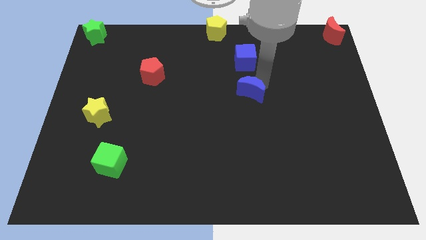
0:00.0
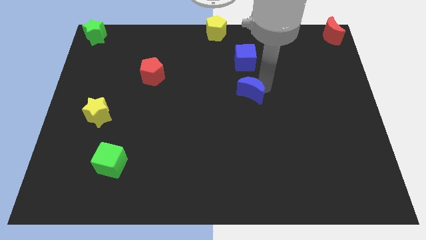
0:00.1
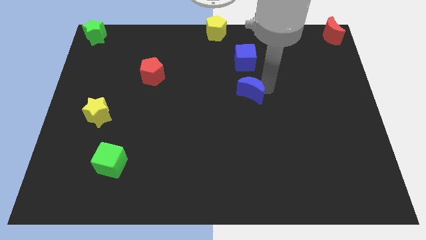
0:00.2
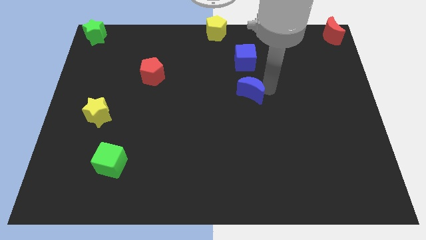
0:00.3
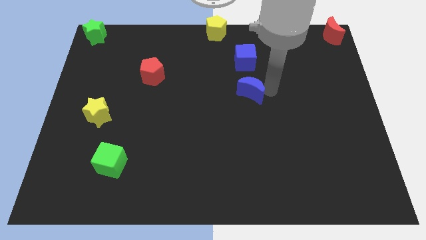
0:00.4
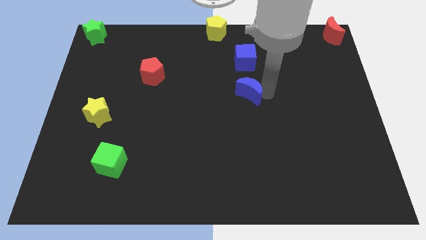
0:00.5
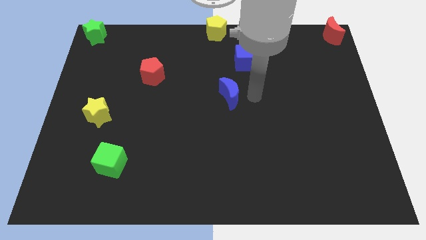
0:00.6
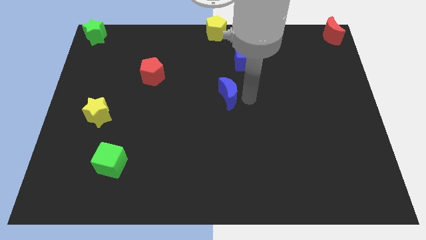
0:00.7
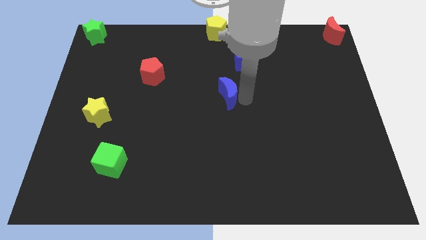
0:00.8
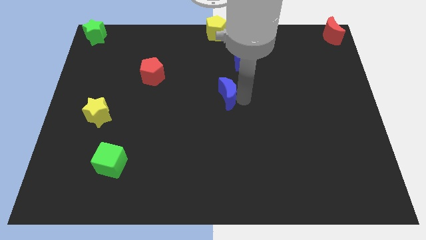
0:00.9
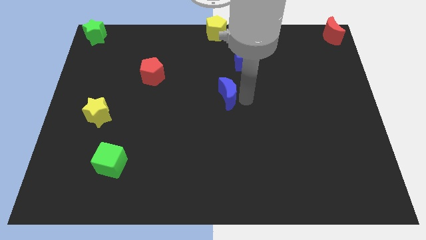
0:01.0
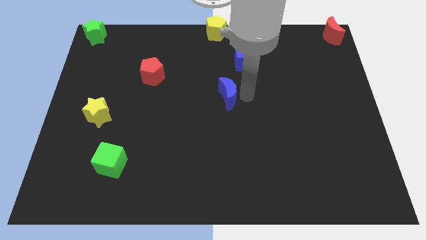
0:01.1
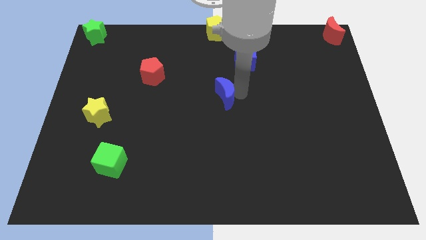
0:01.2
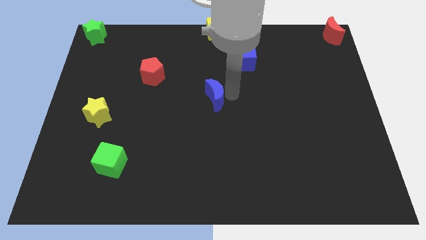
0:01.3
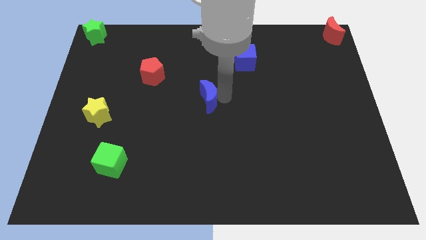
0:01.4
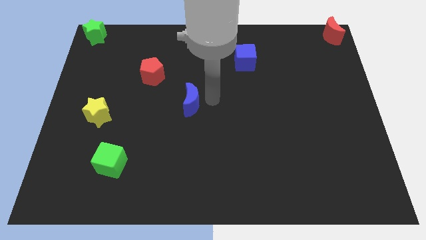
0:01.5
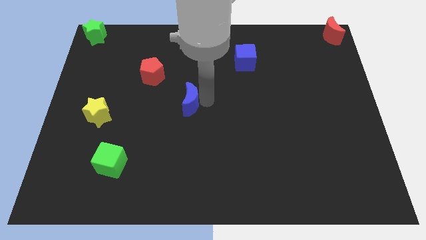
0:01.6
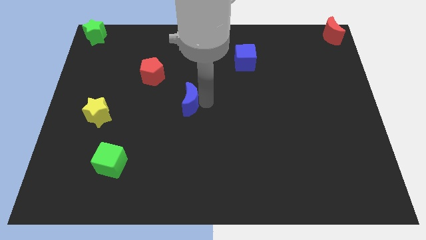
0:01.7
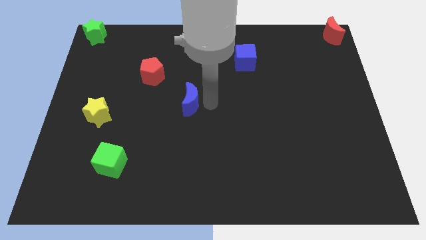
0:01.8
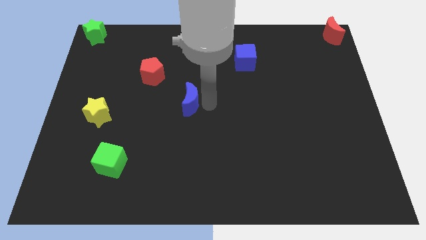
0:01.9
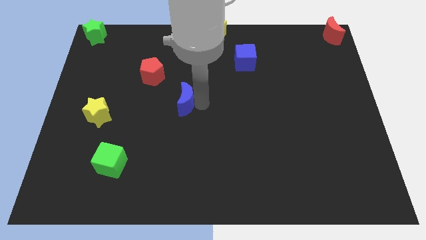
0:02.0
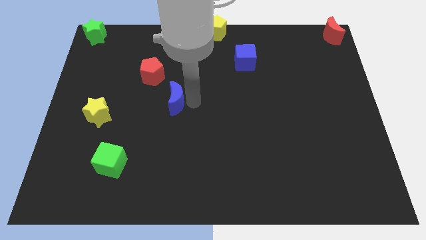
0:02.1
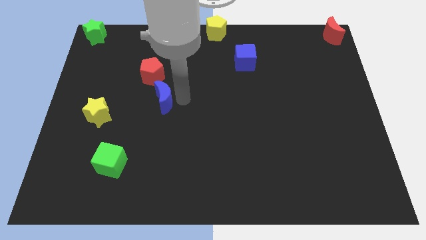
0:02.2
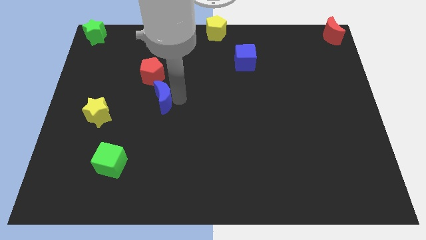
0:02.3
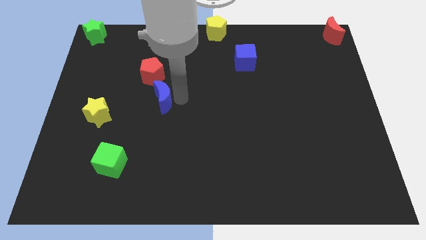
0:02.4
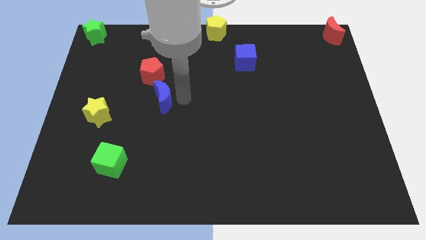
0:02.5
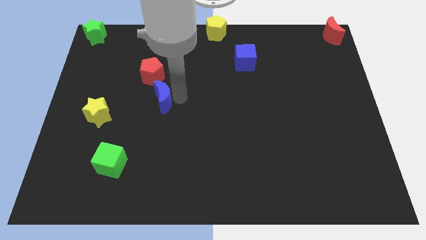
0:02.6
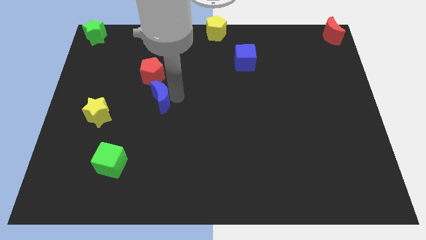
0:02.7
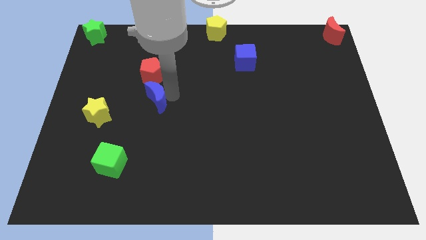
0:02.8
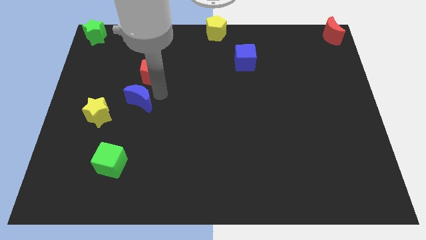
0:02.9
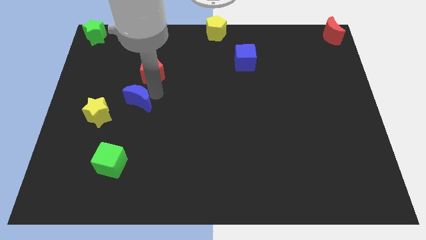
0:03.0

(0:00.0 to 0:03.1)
place the blue moon diagonally to the top right of the yellow star

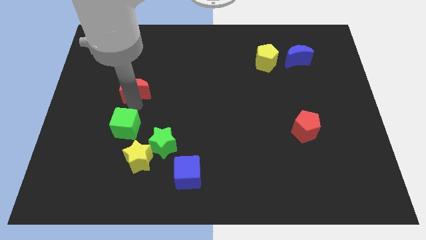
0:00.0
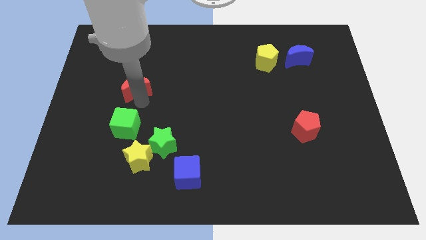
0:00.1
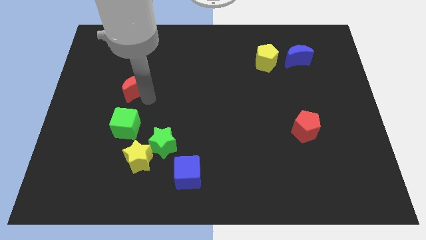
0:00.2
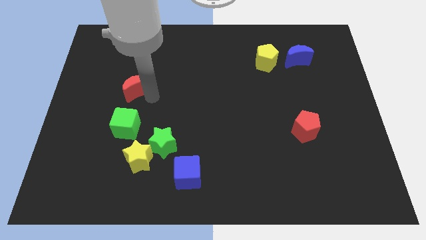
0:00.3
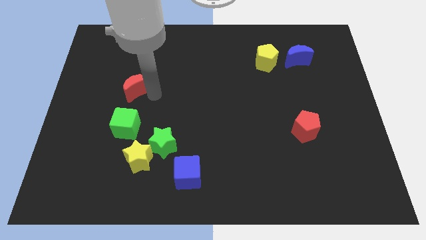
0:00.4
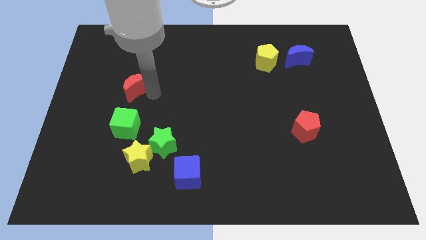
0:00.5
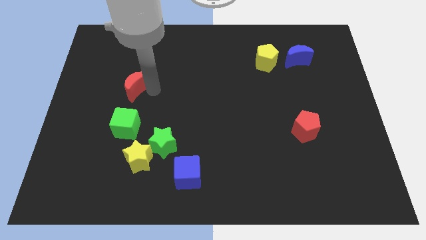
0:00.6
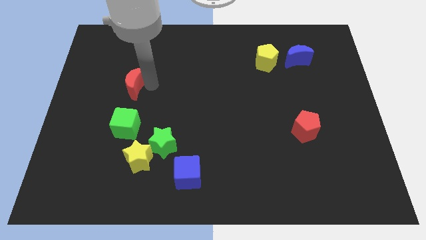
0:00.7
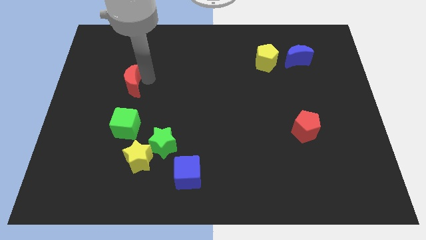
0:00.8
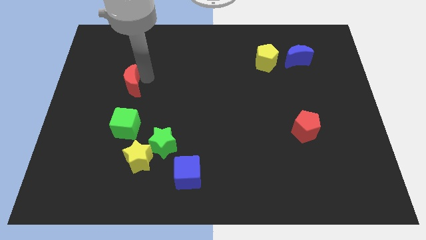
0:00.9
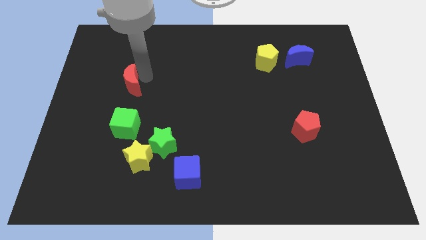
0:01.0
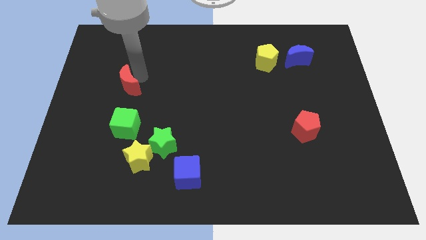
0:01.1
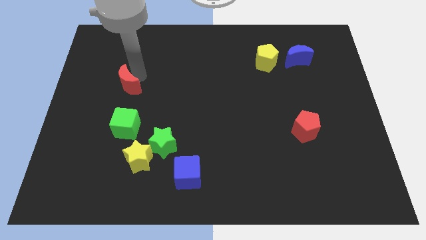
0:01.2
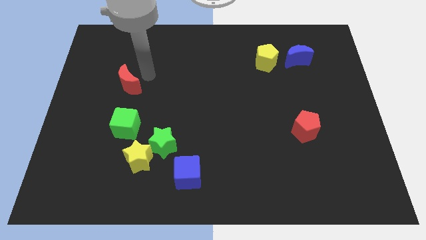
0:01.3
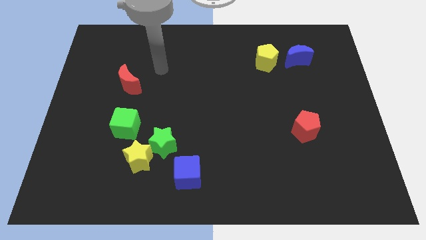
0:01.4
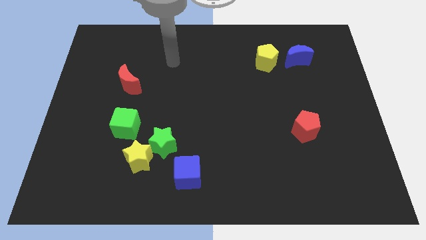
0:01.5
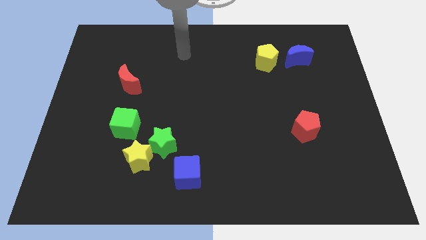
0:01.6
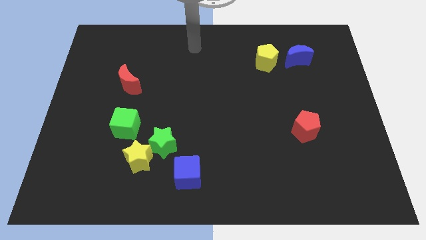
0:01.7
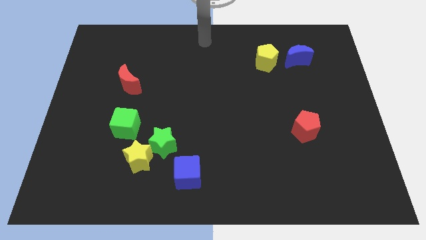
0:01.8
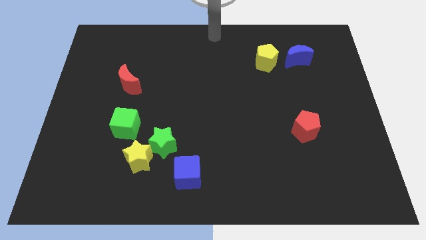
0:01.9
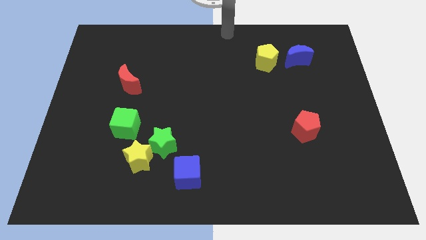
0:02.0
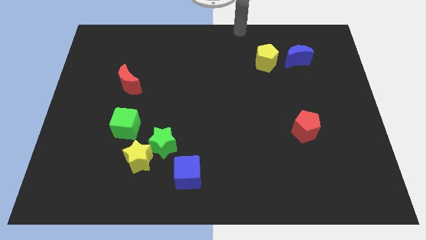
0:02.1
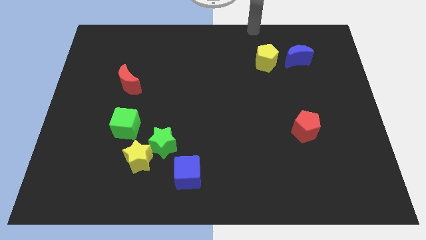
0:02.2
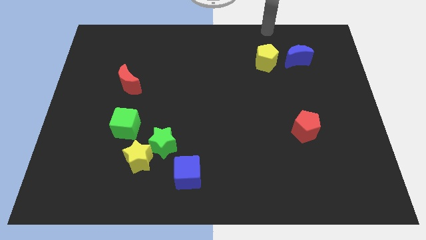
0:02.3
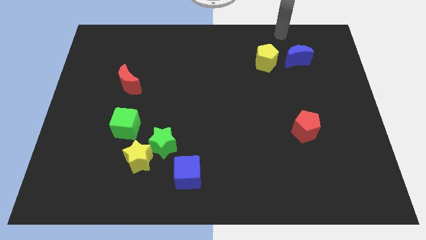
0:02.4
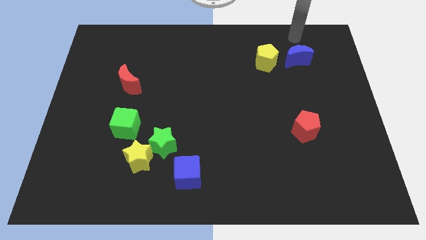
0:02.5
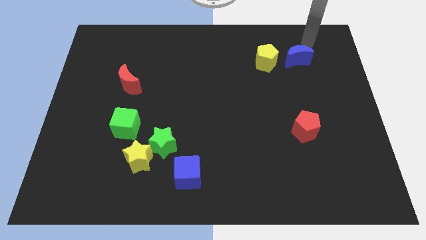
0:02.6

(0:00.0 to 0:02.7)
place the red moon vertically above the green cube

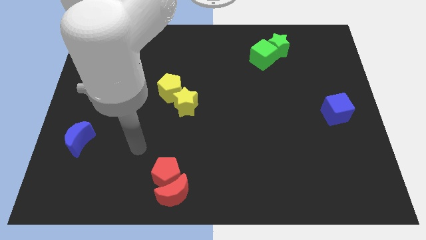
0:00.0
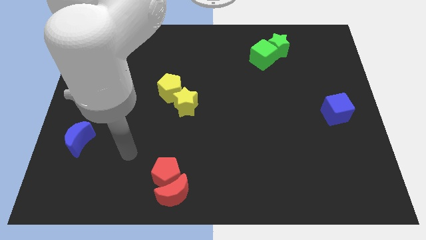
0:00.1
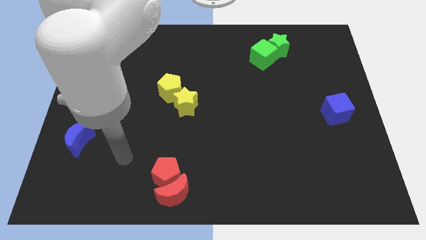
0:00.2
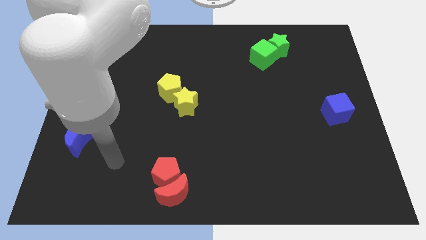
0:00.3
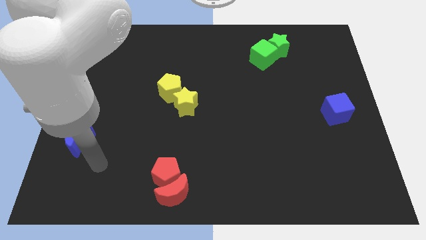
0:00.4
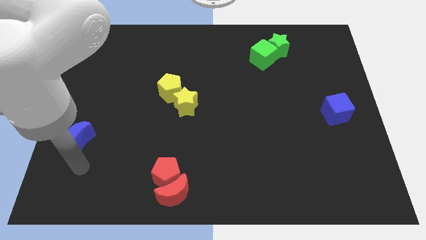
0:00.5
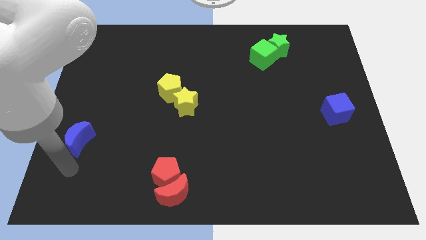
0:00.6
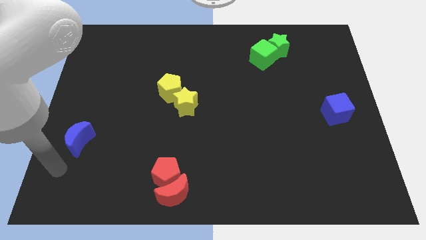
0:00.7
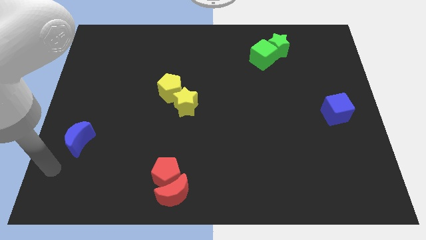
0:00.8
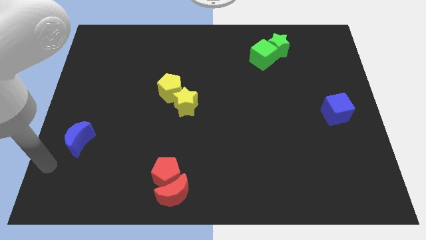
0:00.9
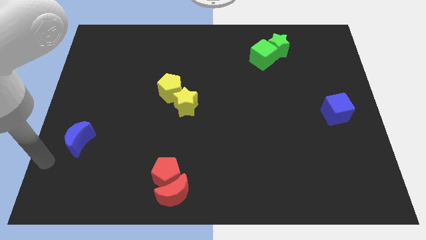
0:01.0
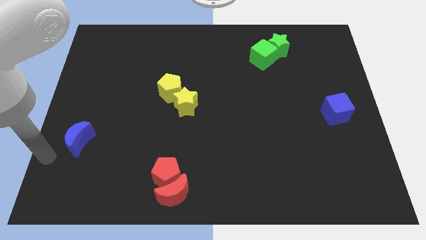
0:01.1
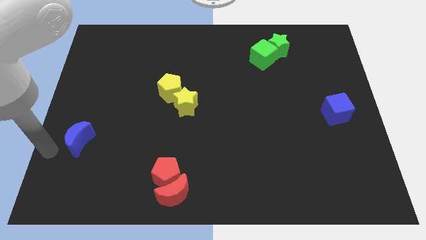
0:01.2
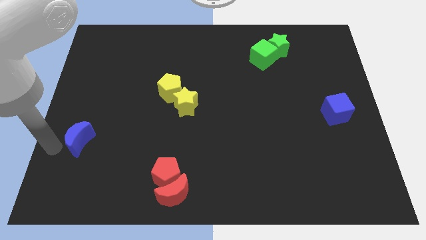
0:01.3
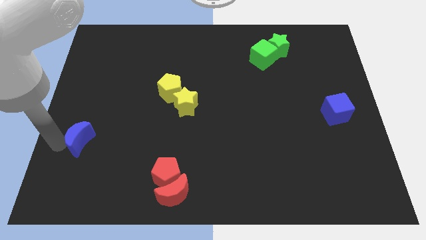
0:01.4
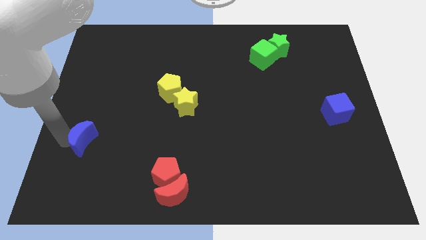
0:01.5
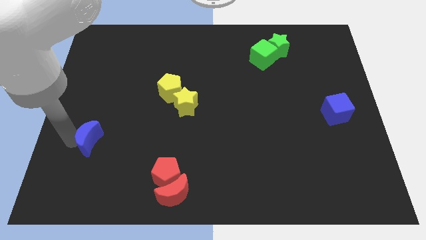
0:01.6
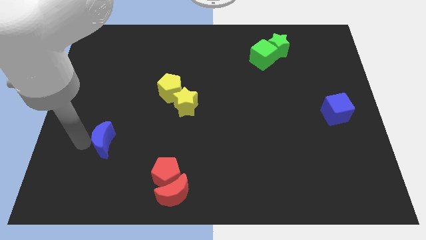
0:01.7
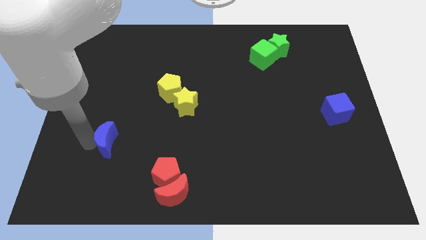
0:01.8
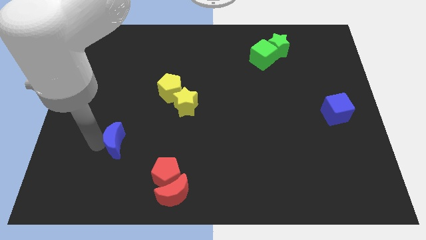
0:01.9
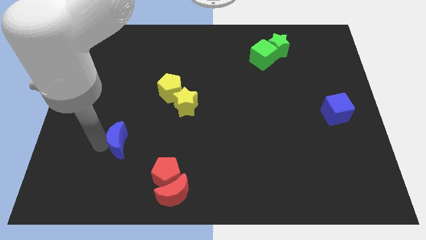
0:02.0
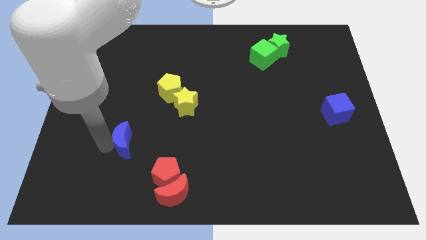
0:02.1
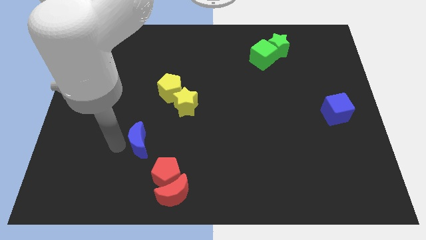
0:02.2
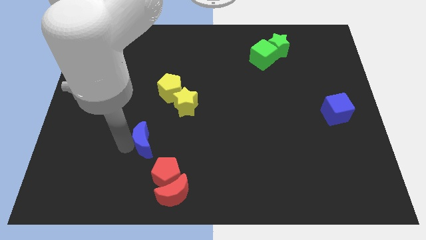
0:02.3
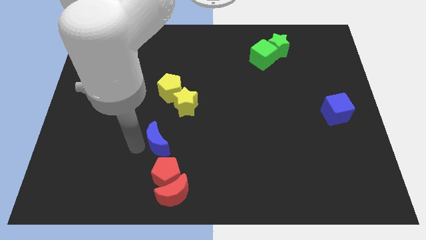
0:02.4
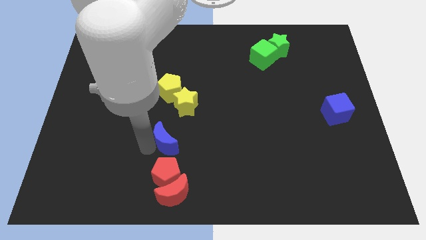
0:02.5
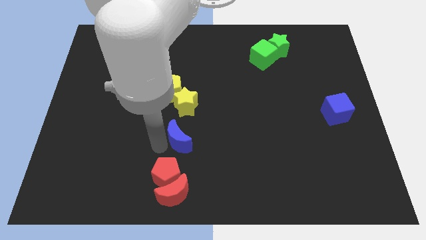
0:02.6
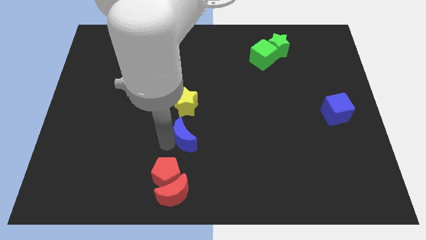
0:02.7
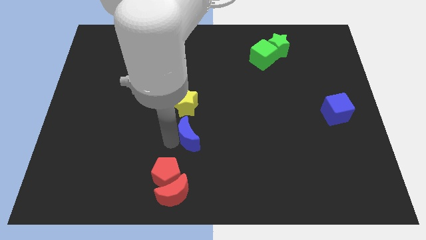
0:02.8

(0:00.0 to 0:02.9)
slide the blue moon below the yellow star

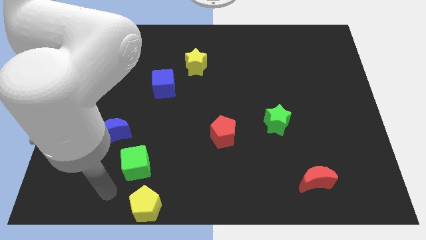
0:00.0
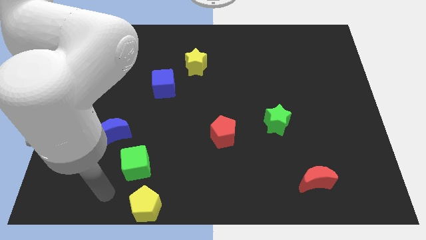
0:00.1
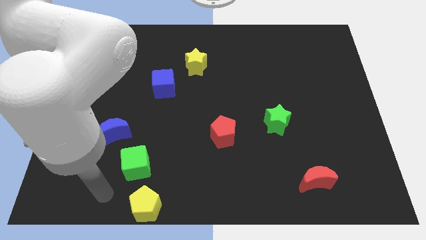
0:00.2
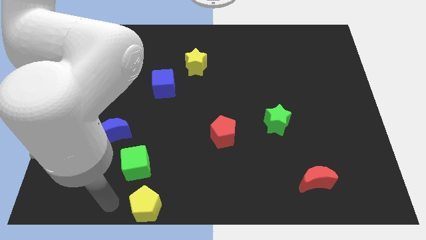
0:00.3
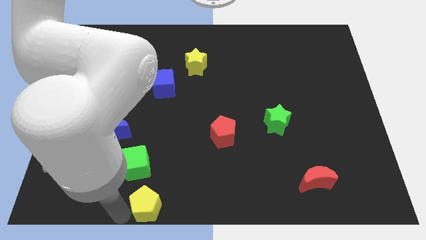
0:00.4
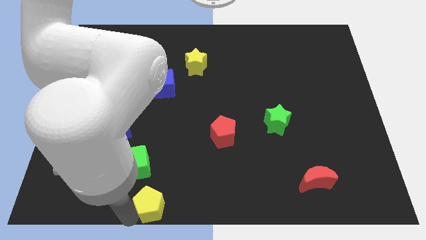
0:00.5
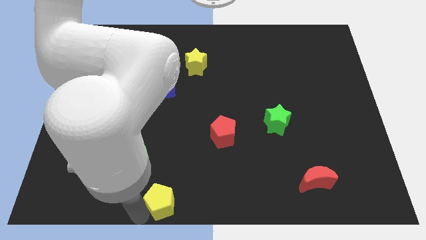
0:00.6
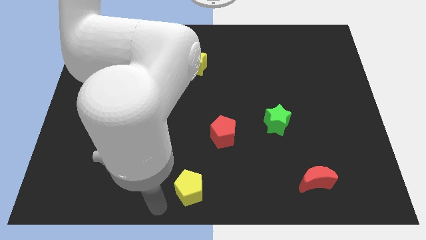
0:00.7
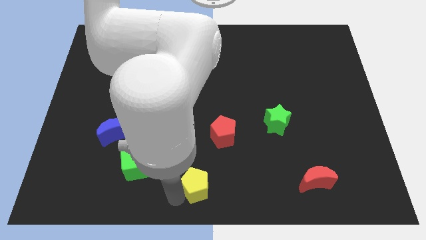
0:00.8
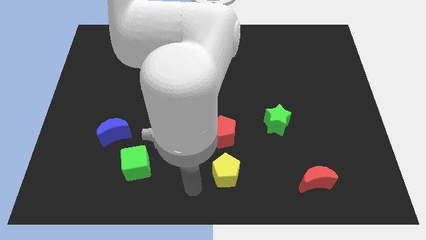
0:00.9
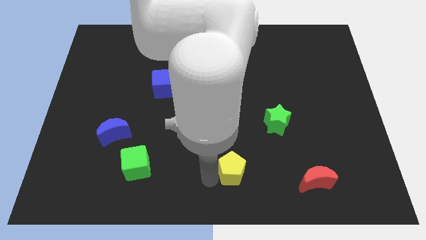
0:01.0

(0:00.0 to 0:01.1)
move the yellow pentagon to the bottom of the red pentagon
